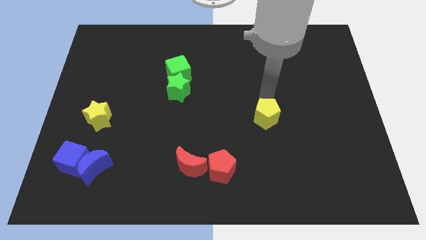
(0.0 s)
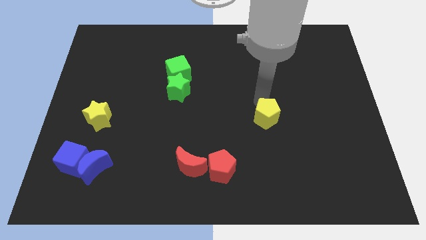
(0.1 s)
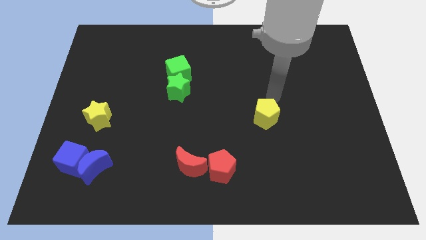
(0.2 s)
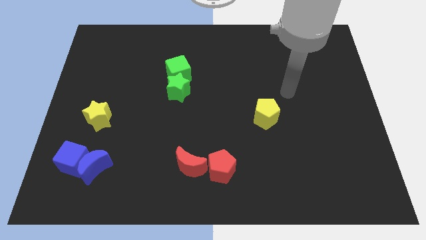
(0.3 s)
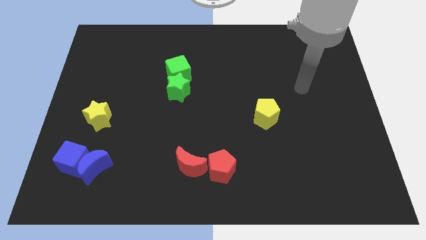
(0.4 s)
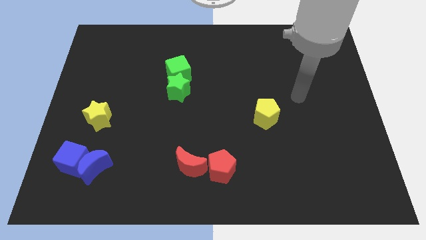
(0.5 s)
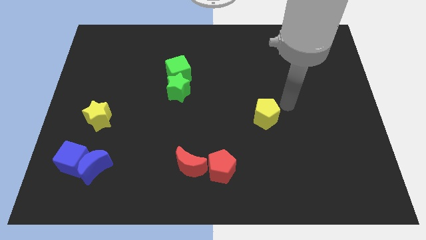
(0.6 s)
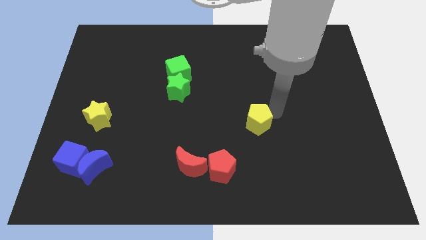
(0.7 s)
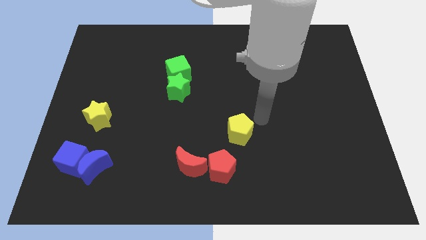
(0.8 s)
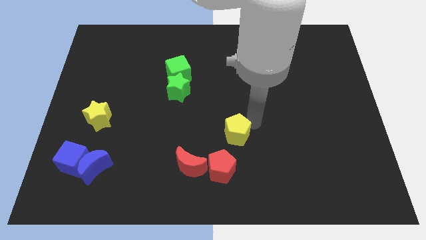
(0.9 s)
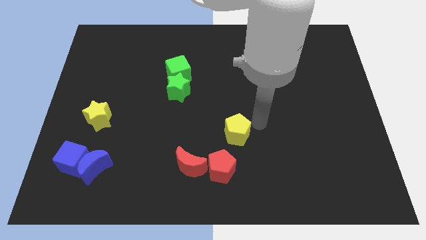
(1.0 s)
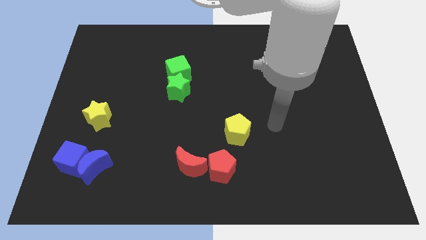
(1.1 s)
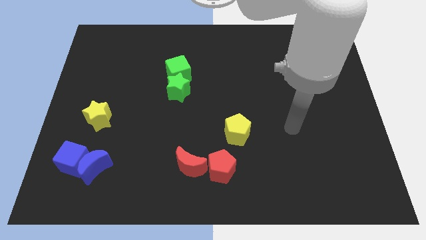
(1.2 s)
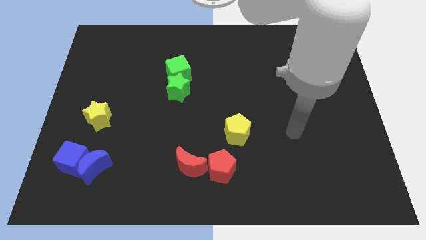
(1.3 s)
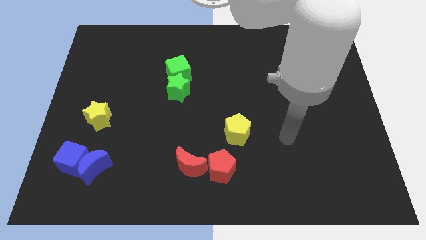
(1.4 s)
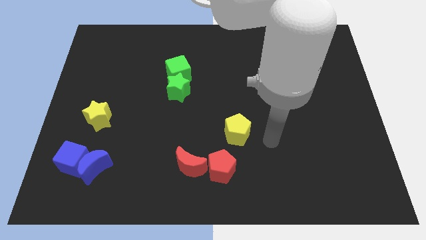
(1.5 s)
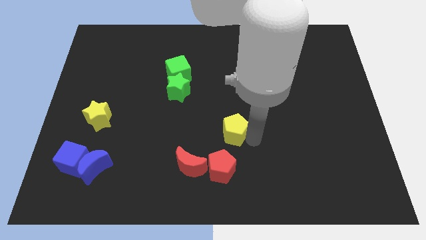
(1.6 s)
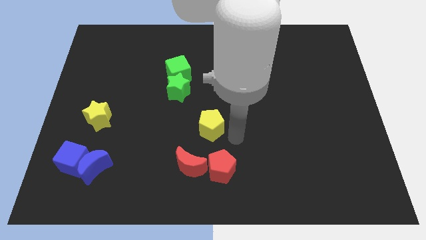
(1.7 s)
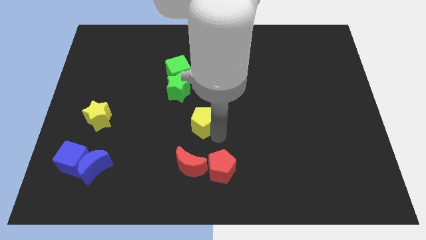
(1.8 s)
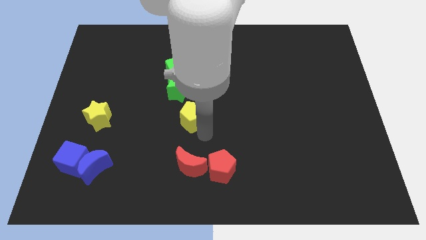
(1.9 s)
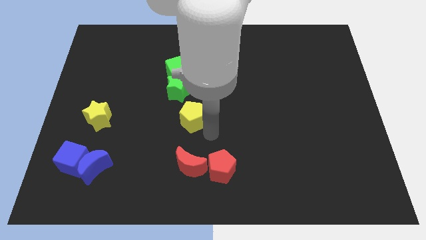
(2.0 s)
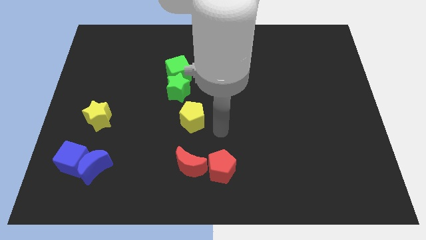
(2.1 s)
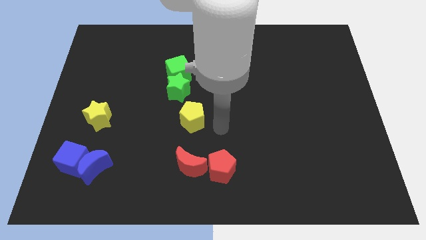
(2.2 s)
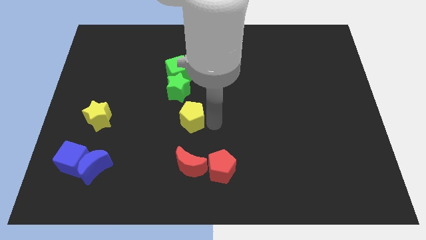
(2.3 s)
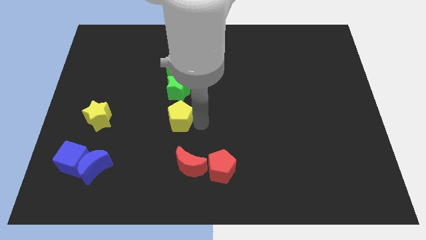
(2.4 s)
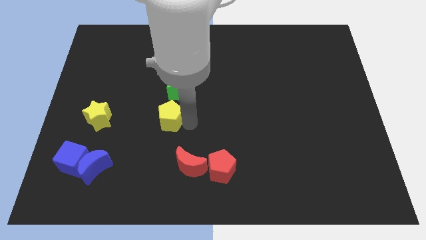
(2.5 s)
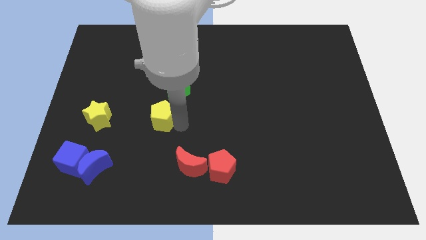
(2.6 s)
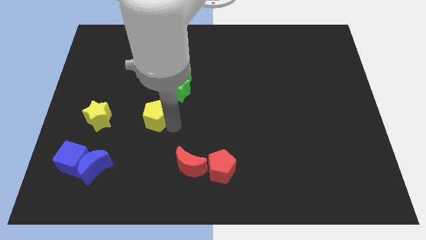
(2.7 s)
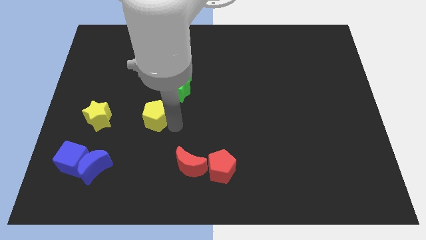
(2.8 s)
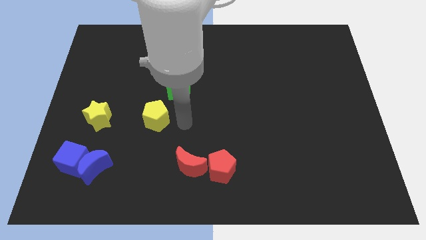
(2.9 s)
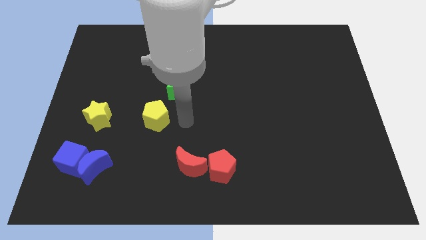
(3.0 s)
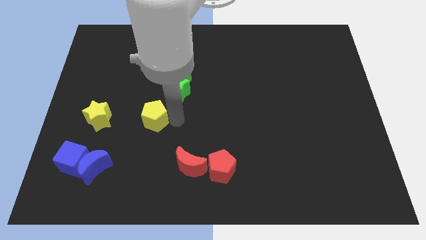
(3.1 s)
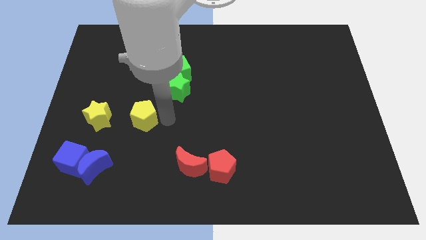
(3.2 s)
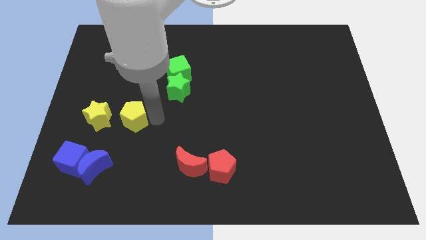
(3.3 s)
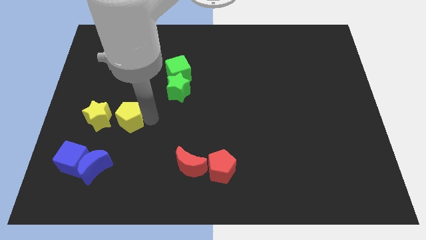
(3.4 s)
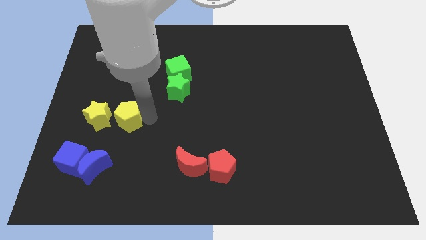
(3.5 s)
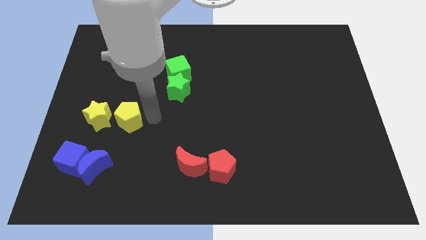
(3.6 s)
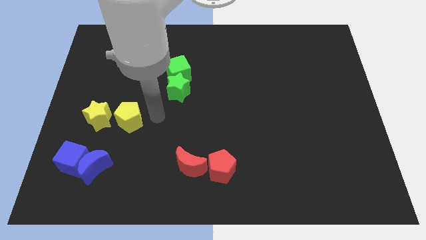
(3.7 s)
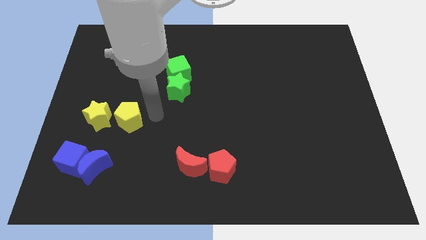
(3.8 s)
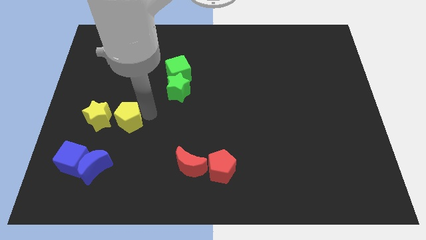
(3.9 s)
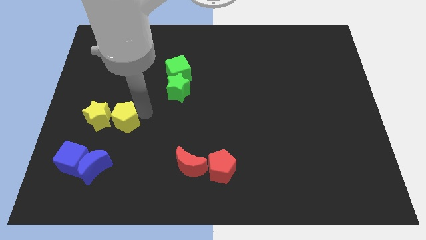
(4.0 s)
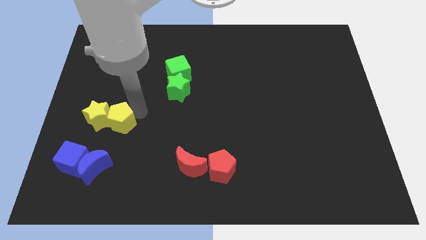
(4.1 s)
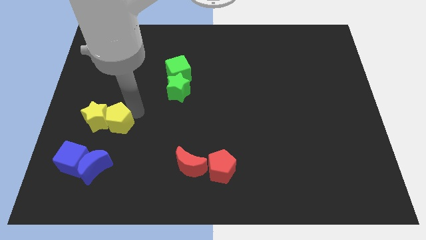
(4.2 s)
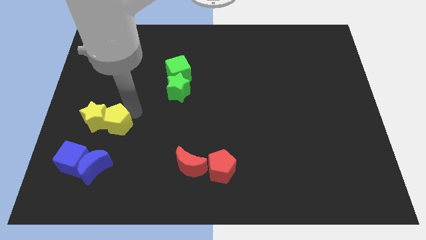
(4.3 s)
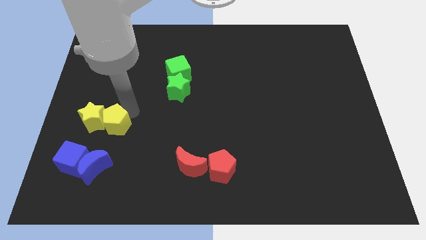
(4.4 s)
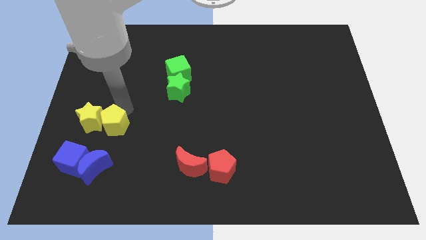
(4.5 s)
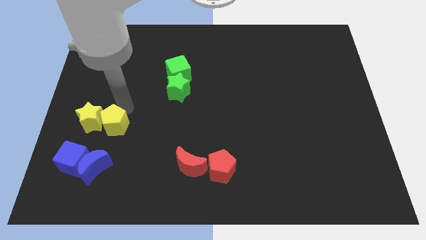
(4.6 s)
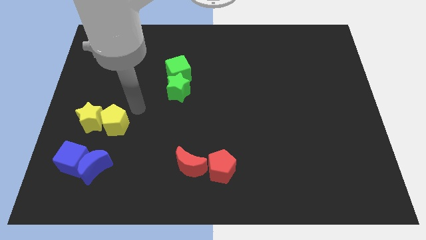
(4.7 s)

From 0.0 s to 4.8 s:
put the yellow pentagon into the yellow star

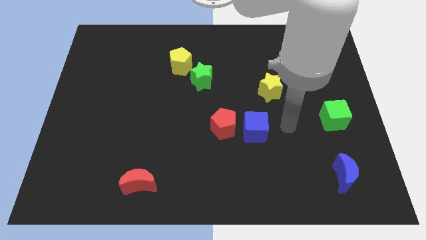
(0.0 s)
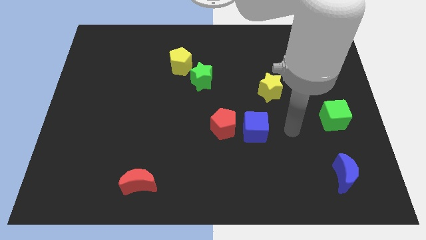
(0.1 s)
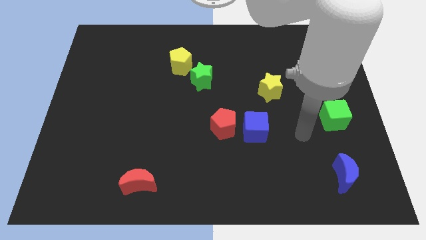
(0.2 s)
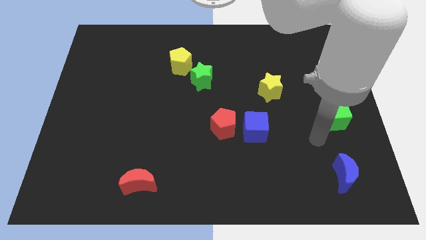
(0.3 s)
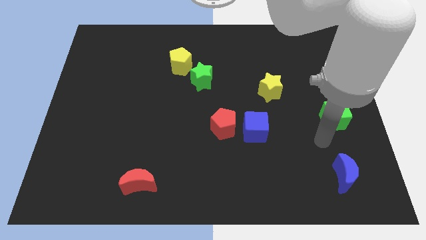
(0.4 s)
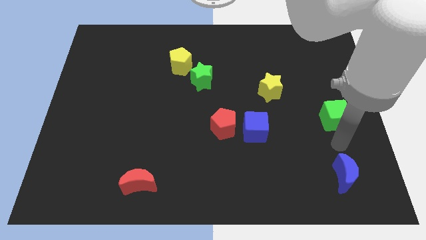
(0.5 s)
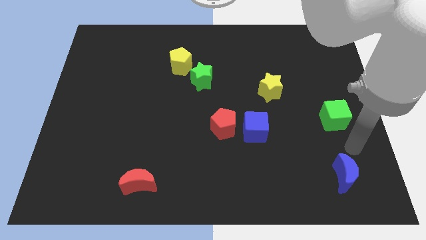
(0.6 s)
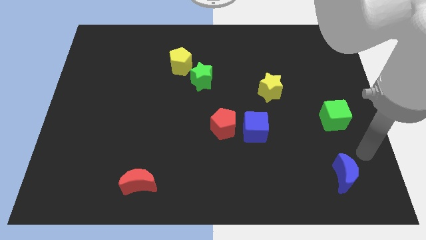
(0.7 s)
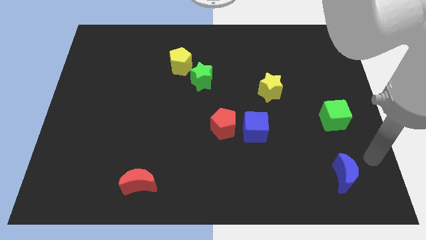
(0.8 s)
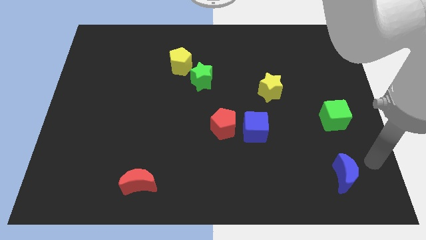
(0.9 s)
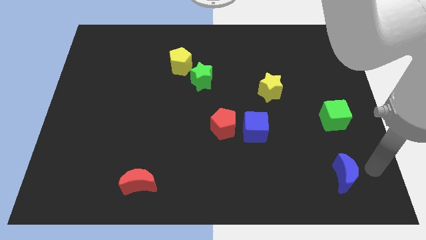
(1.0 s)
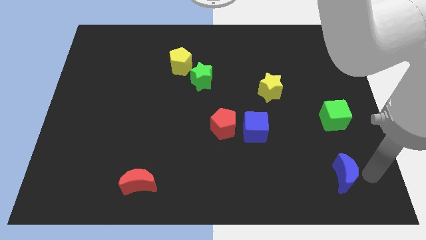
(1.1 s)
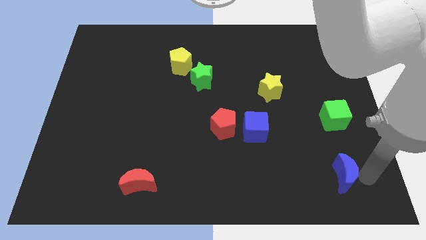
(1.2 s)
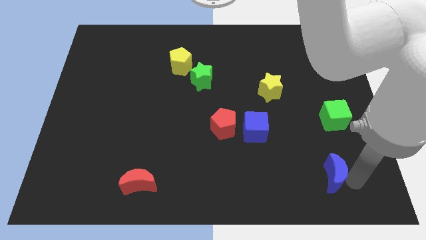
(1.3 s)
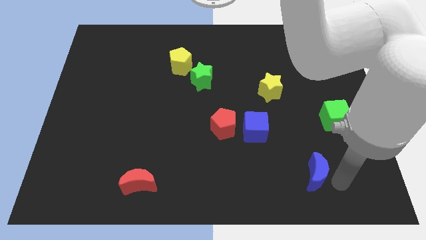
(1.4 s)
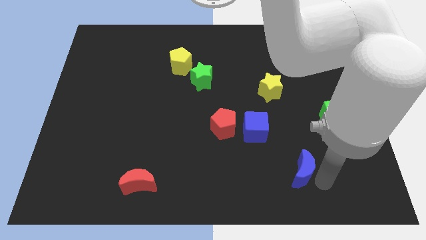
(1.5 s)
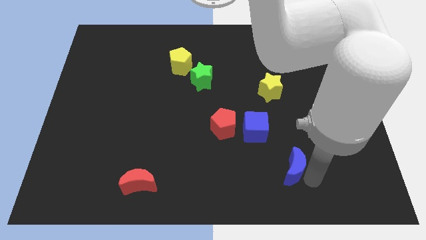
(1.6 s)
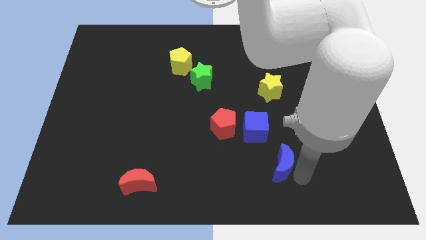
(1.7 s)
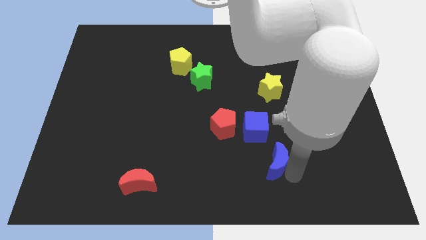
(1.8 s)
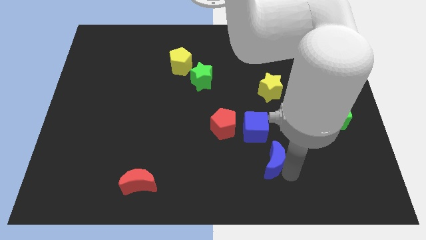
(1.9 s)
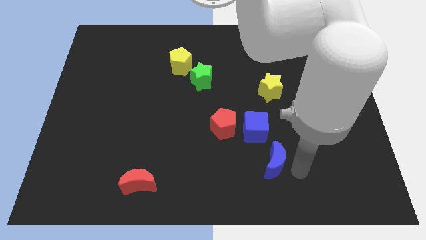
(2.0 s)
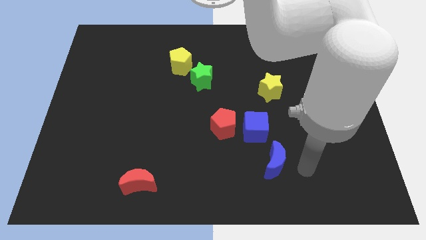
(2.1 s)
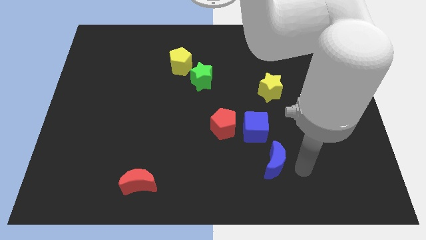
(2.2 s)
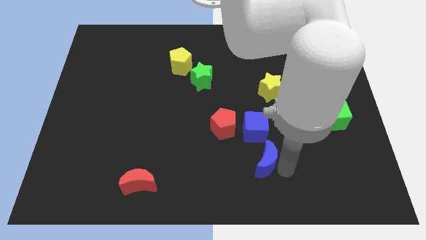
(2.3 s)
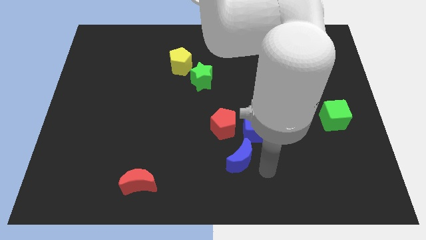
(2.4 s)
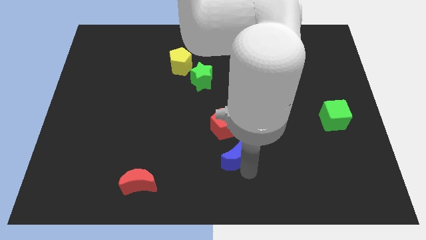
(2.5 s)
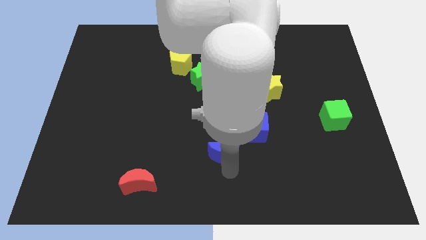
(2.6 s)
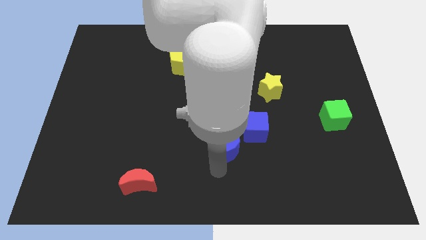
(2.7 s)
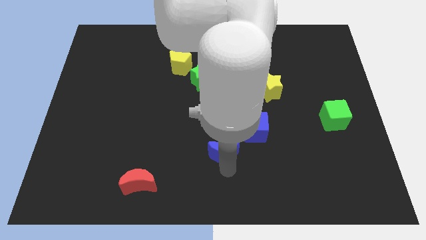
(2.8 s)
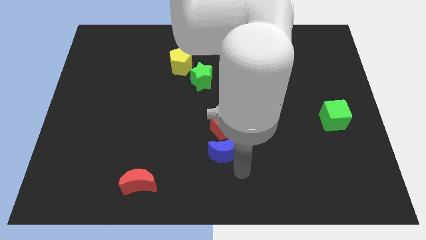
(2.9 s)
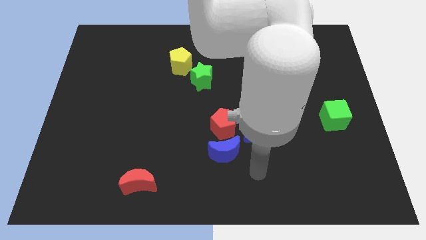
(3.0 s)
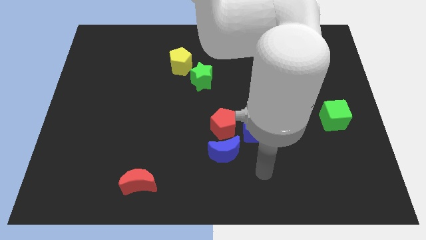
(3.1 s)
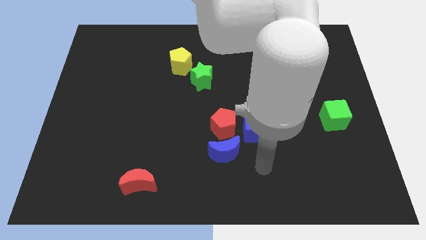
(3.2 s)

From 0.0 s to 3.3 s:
place blue moon below the red pentagon

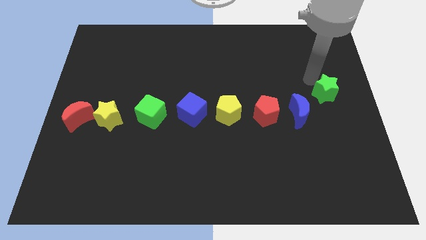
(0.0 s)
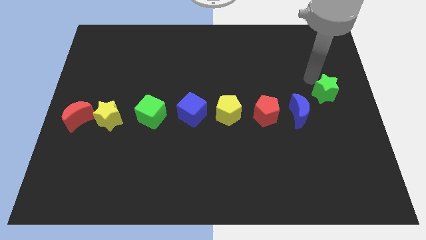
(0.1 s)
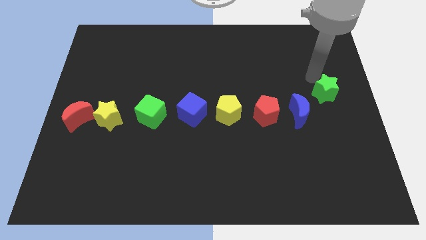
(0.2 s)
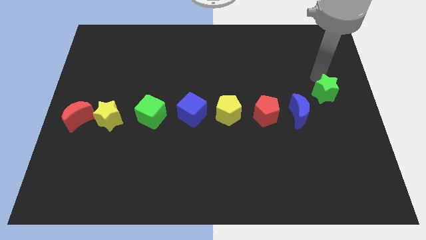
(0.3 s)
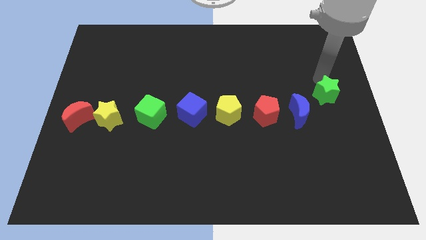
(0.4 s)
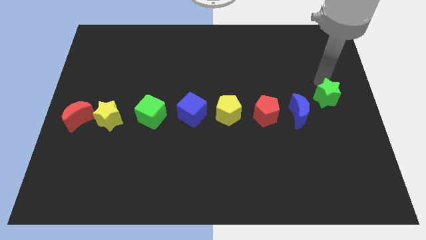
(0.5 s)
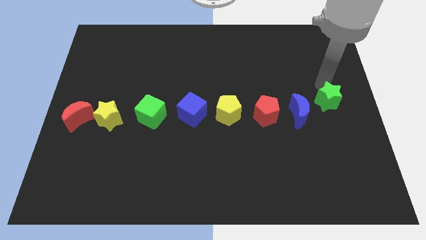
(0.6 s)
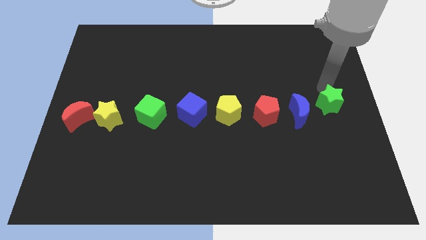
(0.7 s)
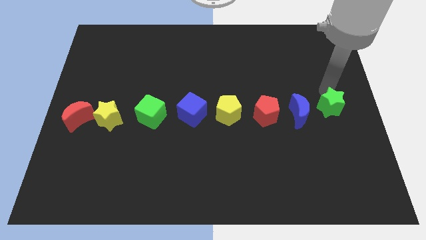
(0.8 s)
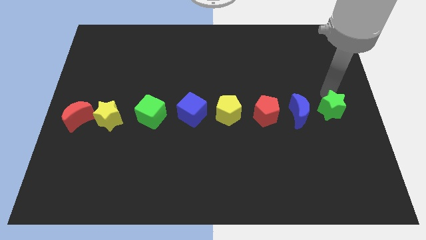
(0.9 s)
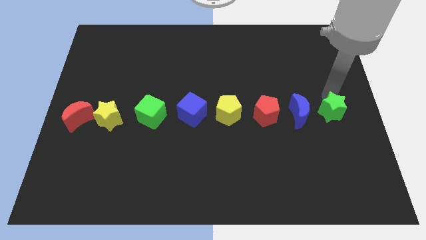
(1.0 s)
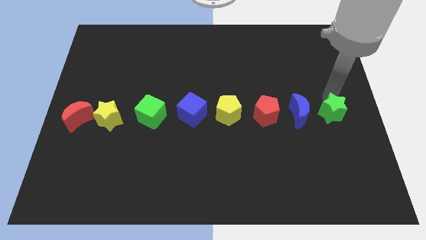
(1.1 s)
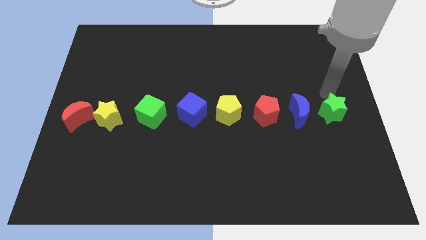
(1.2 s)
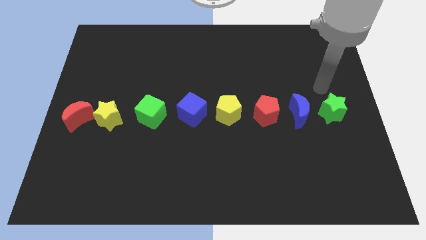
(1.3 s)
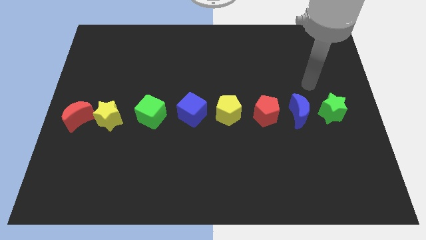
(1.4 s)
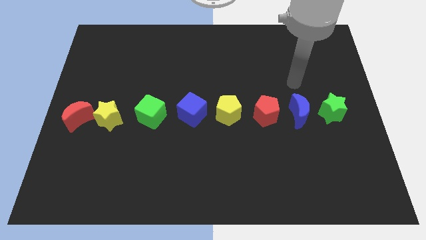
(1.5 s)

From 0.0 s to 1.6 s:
move the green star right to the blue moon
